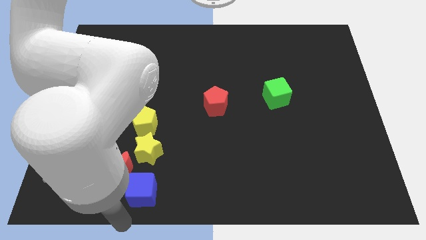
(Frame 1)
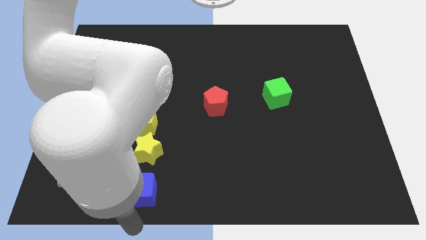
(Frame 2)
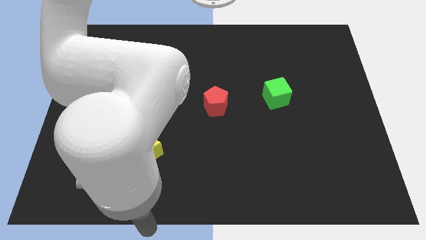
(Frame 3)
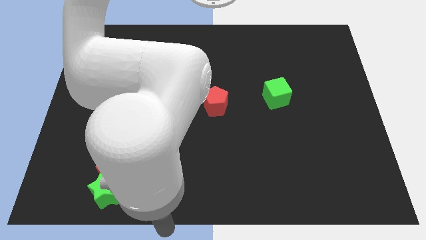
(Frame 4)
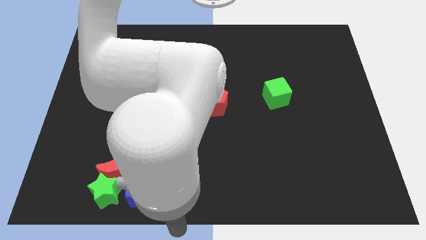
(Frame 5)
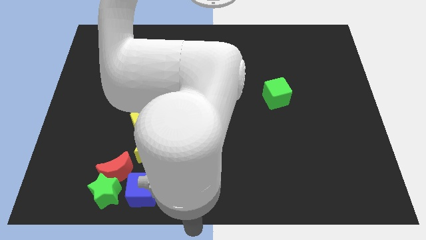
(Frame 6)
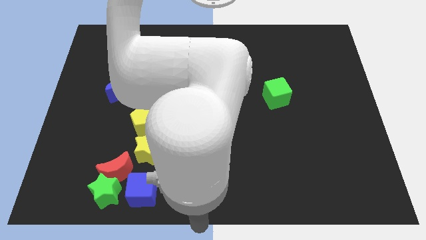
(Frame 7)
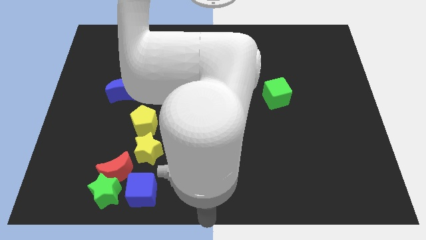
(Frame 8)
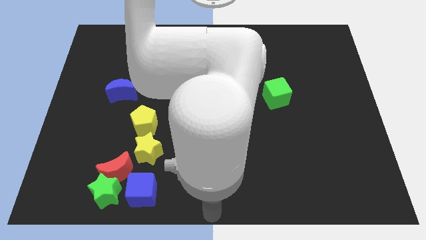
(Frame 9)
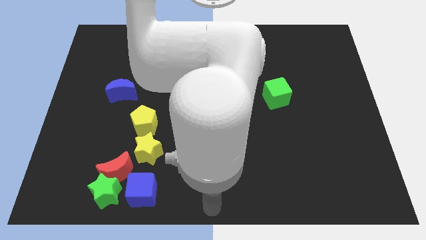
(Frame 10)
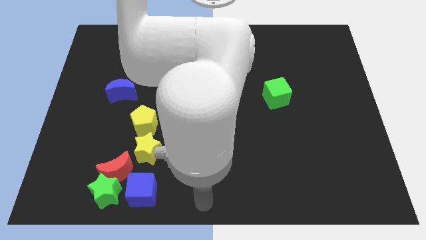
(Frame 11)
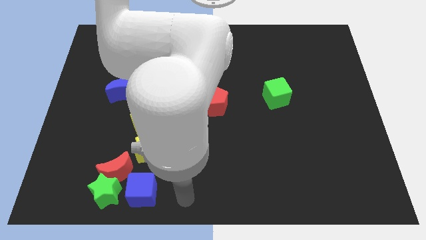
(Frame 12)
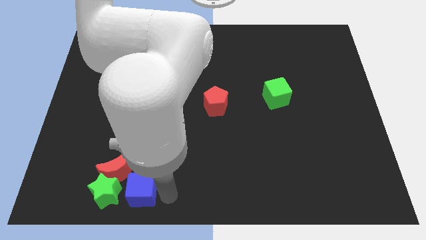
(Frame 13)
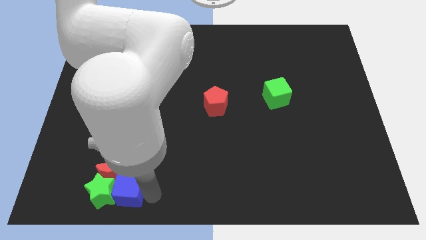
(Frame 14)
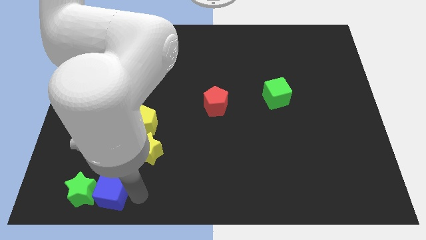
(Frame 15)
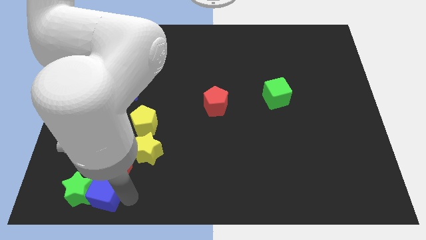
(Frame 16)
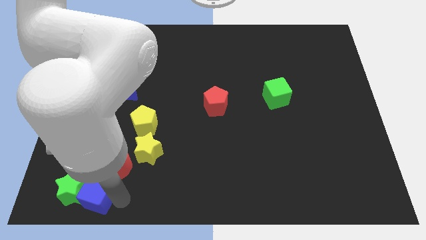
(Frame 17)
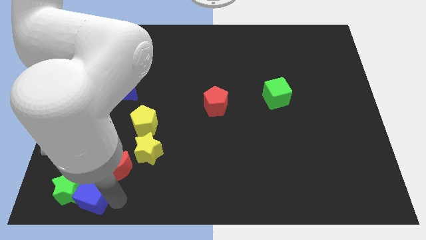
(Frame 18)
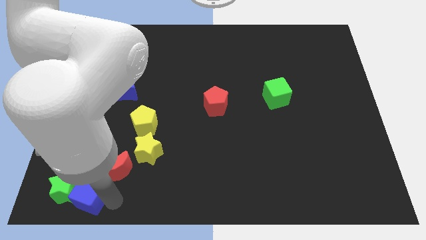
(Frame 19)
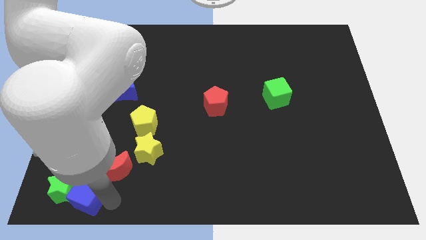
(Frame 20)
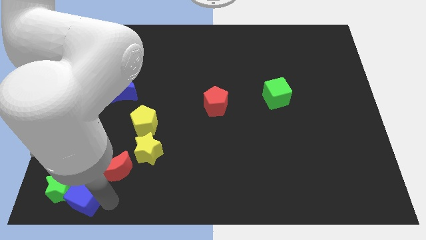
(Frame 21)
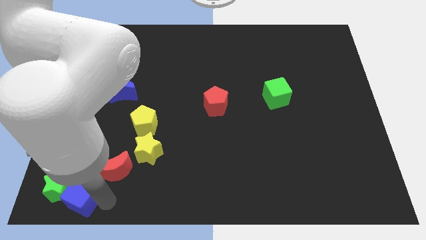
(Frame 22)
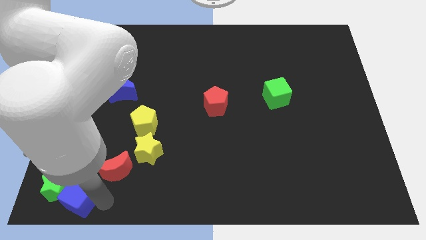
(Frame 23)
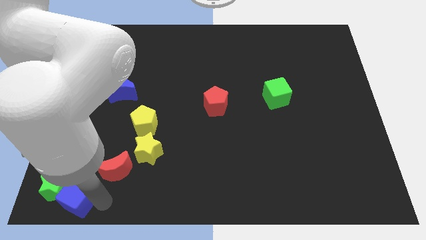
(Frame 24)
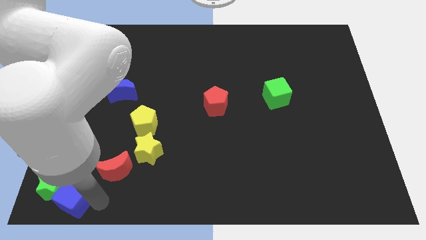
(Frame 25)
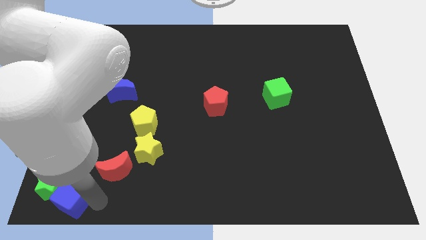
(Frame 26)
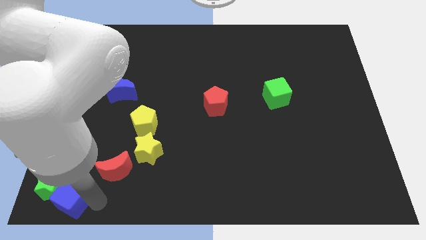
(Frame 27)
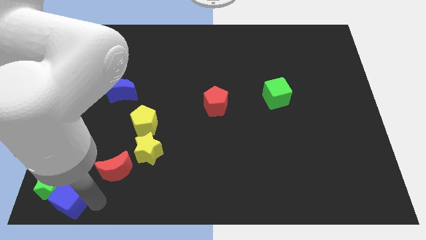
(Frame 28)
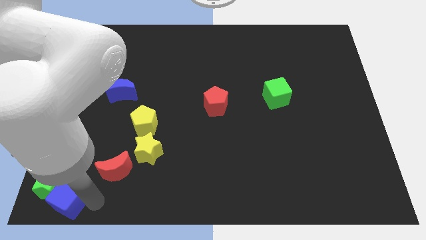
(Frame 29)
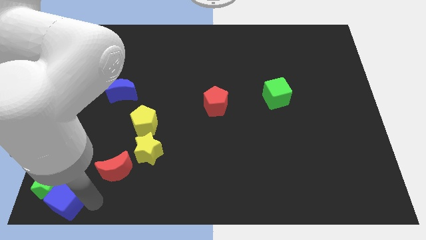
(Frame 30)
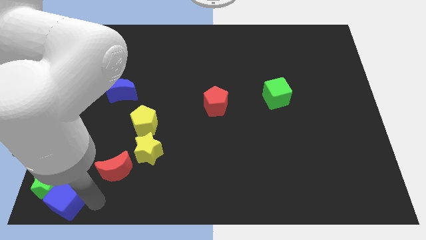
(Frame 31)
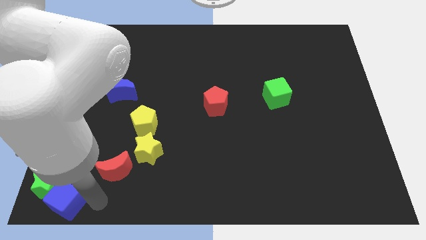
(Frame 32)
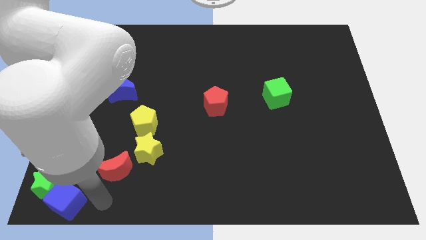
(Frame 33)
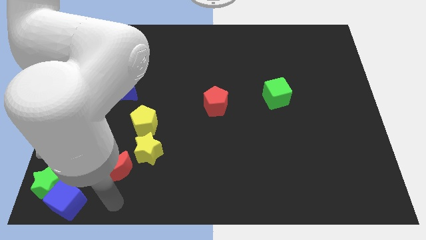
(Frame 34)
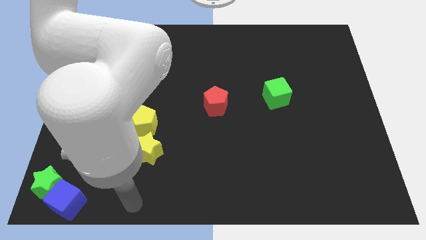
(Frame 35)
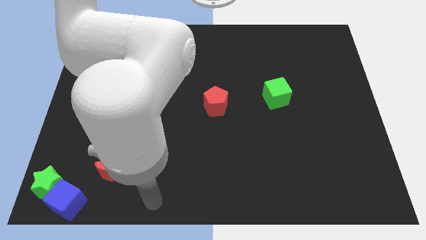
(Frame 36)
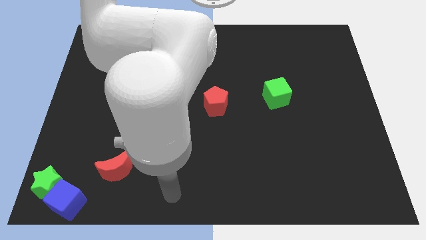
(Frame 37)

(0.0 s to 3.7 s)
push blue cube and green star to the bottom left corner

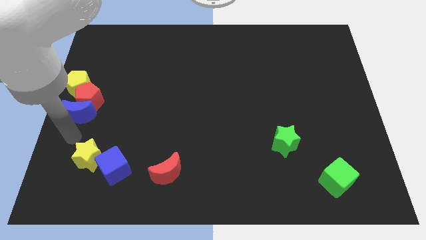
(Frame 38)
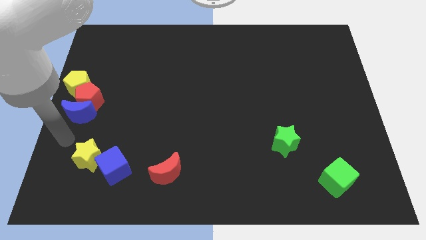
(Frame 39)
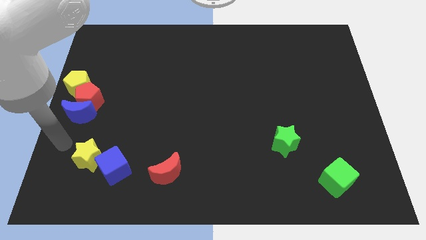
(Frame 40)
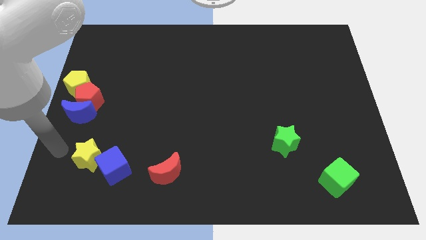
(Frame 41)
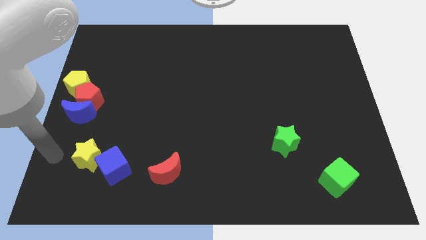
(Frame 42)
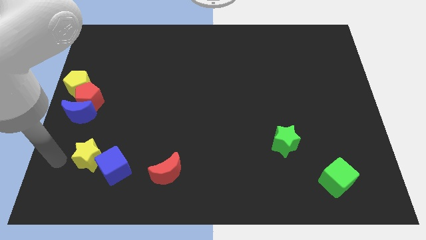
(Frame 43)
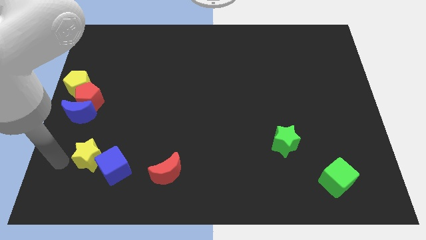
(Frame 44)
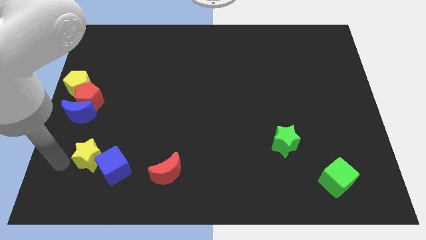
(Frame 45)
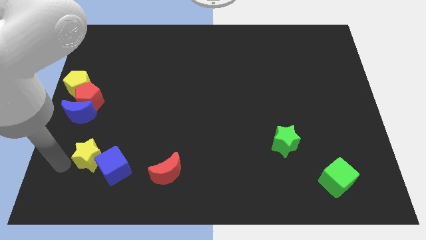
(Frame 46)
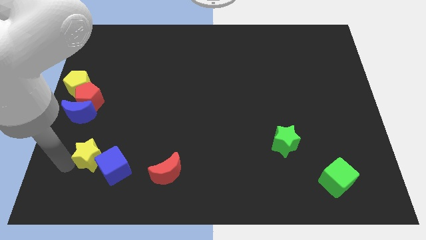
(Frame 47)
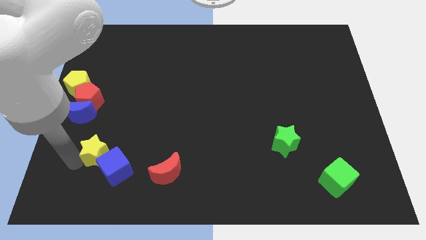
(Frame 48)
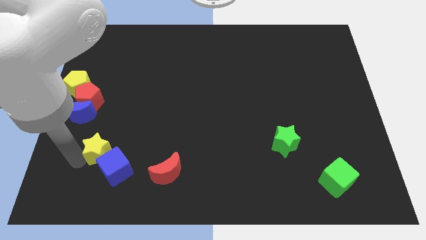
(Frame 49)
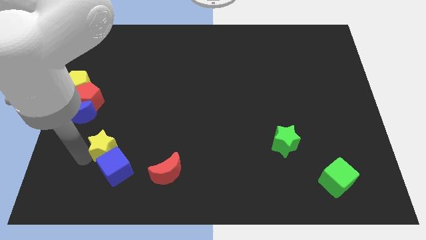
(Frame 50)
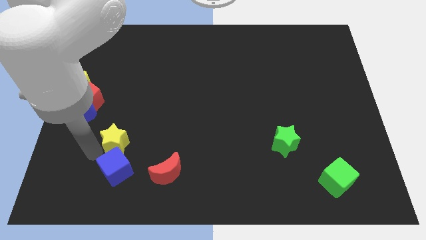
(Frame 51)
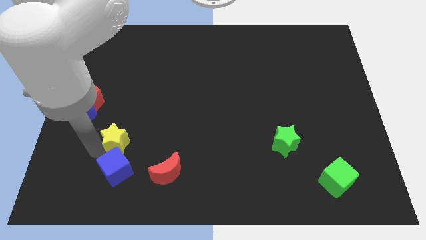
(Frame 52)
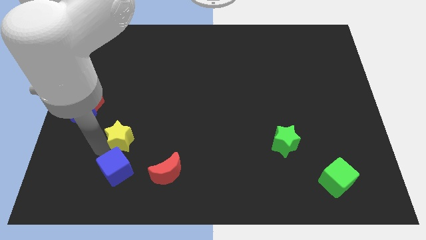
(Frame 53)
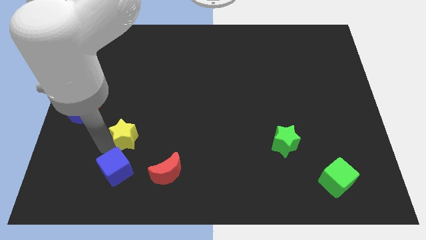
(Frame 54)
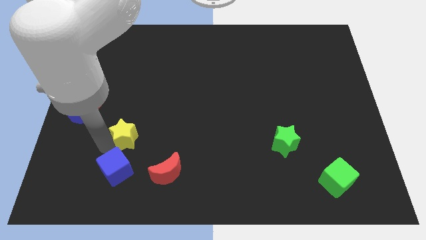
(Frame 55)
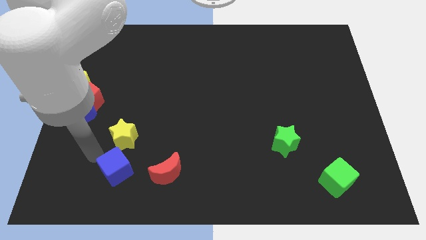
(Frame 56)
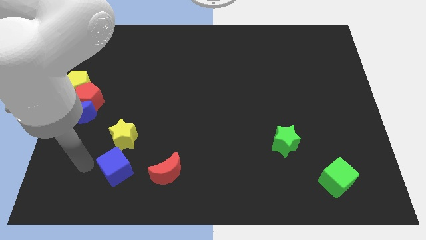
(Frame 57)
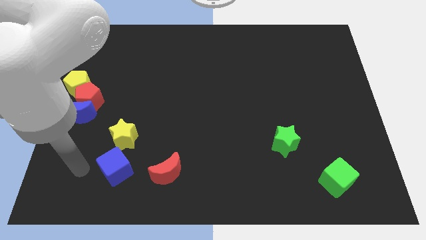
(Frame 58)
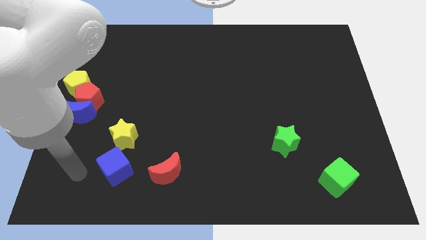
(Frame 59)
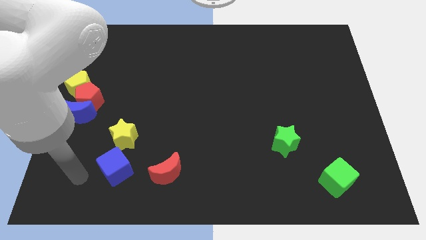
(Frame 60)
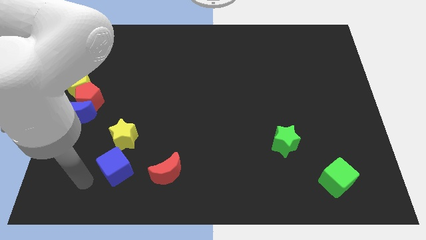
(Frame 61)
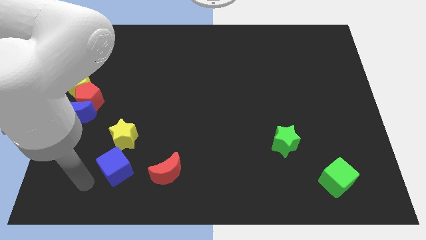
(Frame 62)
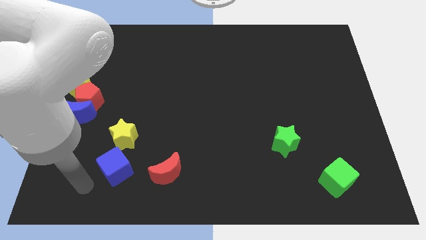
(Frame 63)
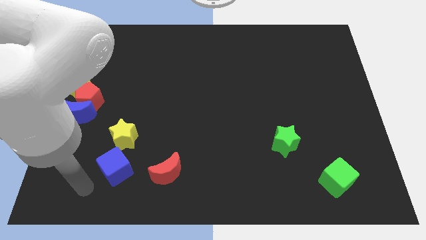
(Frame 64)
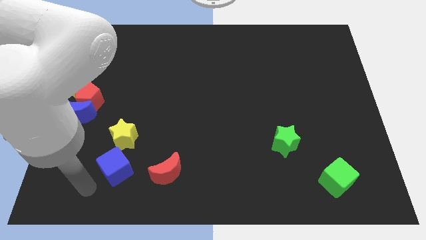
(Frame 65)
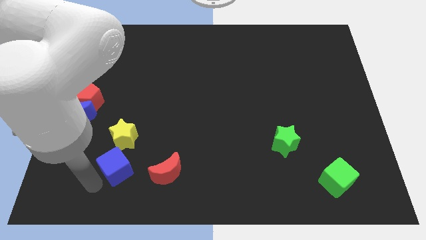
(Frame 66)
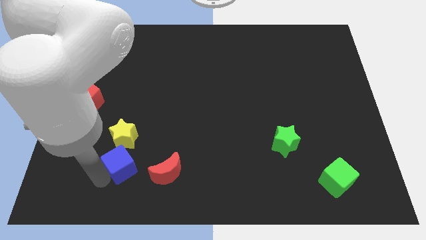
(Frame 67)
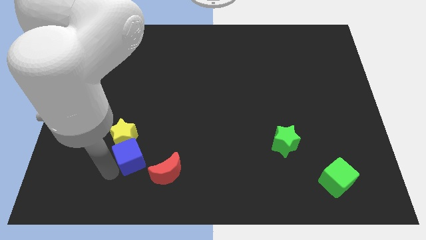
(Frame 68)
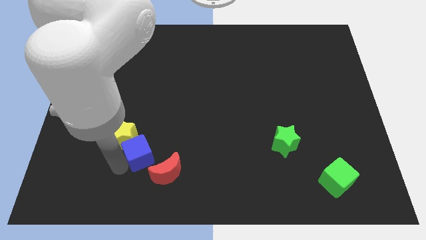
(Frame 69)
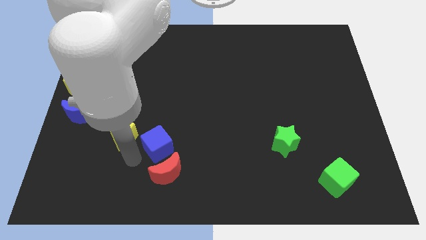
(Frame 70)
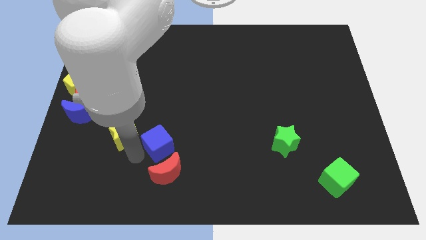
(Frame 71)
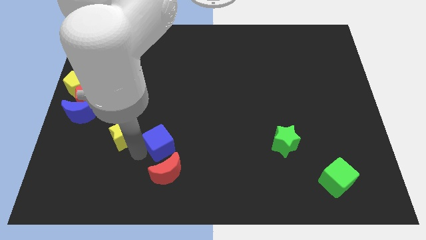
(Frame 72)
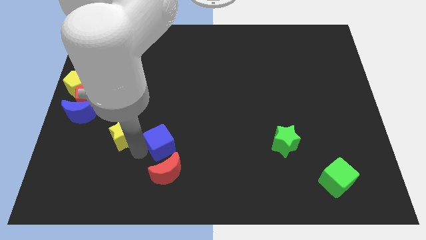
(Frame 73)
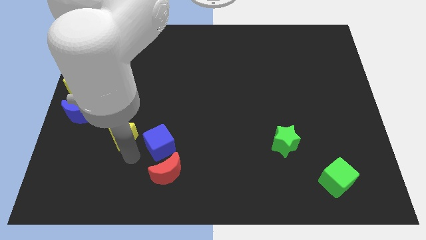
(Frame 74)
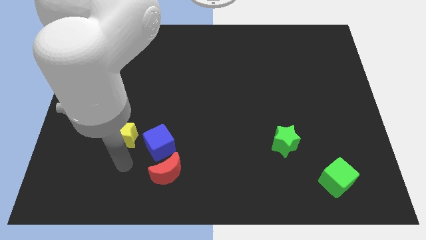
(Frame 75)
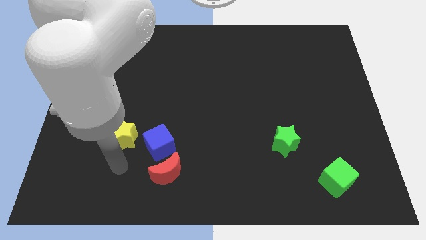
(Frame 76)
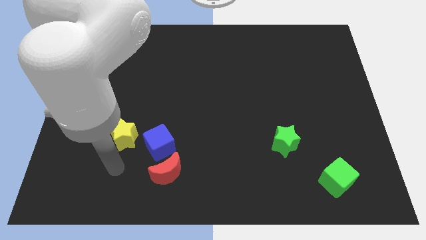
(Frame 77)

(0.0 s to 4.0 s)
move the yellow star and the blue cube away from each other

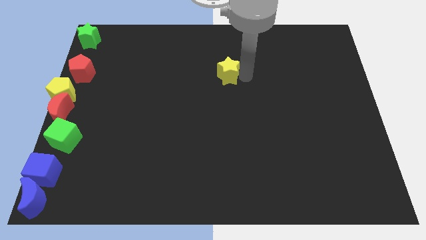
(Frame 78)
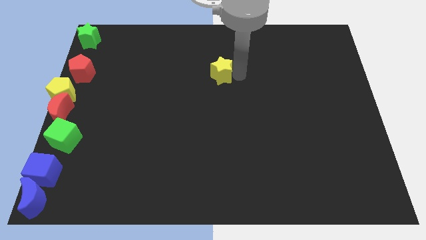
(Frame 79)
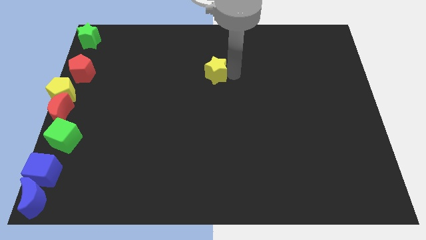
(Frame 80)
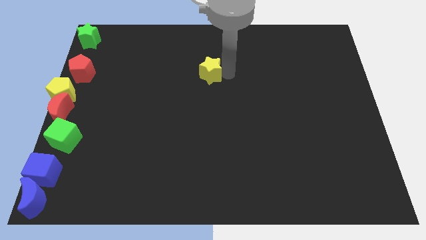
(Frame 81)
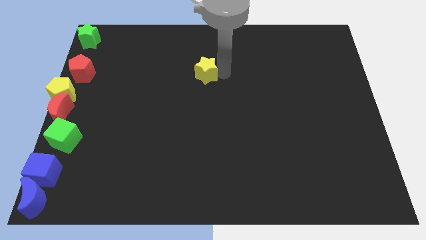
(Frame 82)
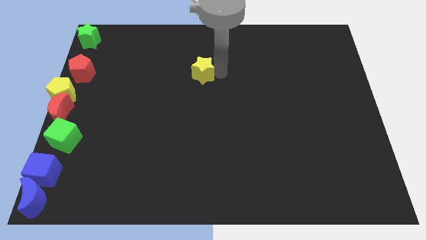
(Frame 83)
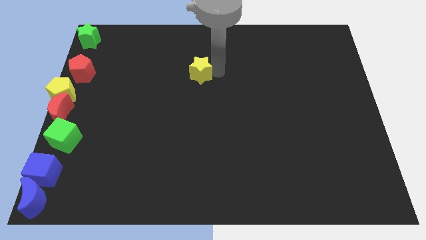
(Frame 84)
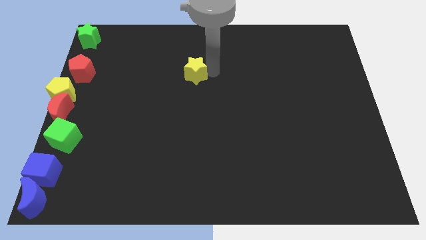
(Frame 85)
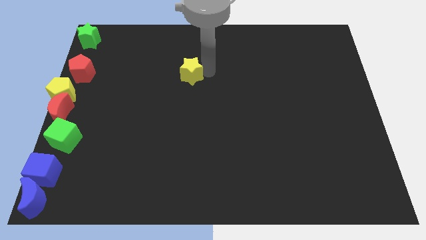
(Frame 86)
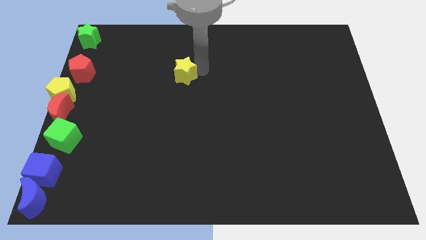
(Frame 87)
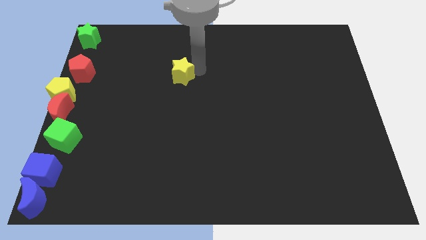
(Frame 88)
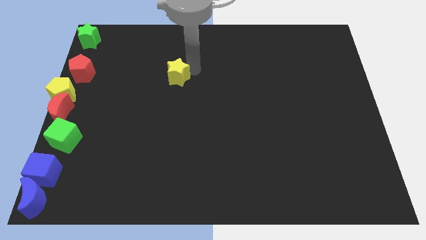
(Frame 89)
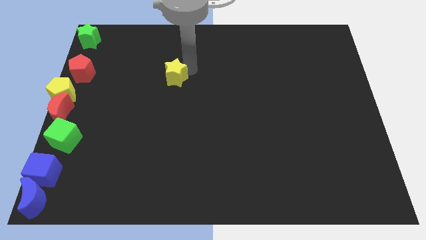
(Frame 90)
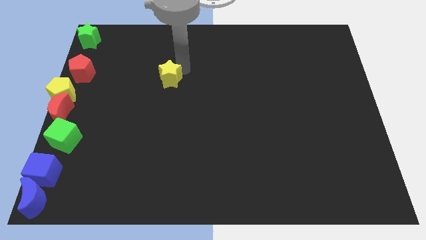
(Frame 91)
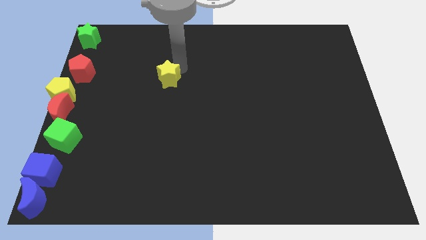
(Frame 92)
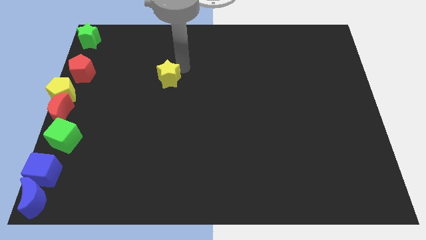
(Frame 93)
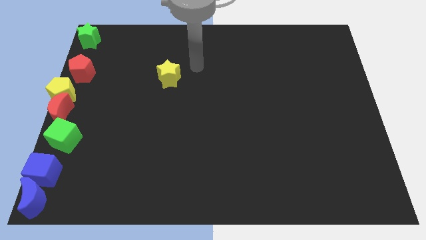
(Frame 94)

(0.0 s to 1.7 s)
move the yellow star parallel to the red pentagon
